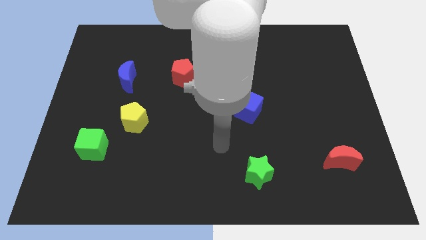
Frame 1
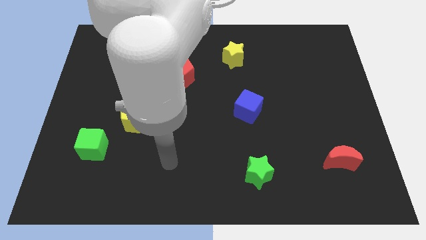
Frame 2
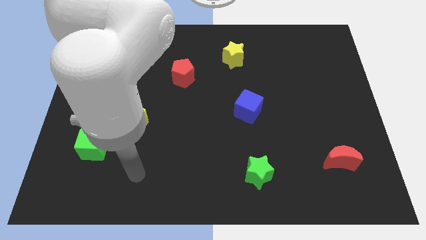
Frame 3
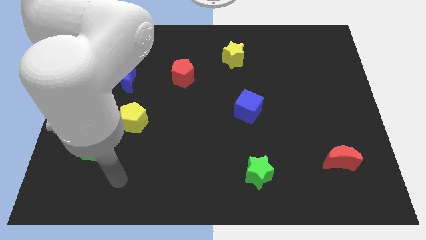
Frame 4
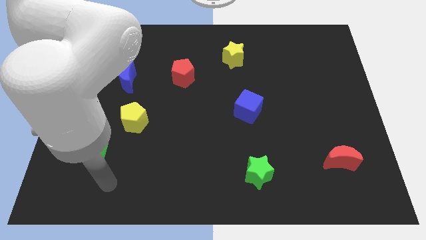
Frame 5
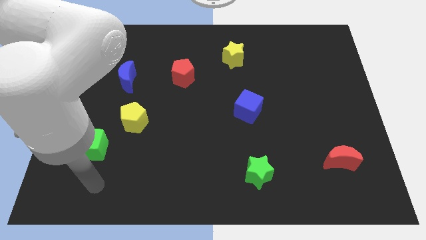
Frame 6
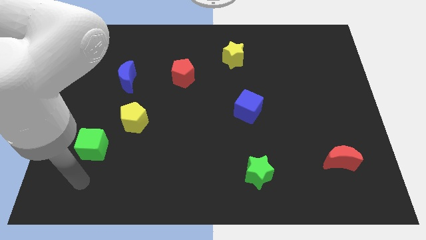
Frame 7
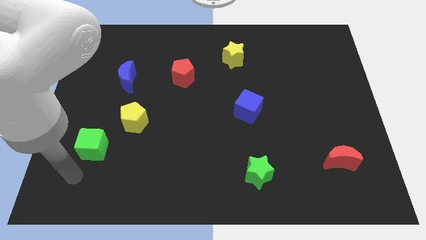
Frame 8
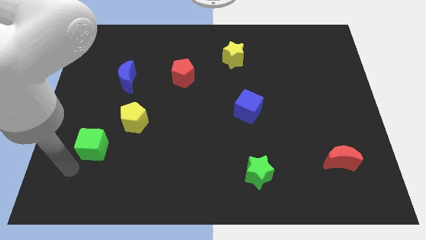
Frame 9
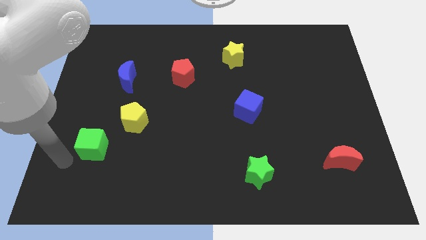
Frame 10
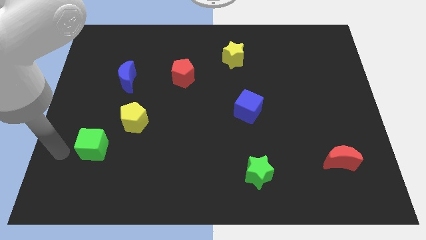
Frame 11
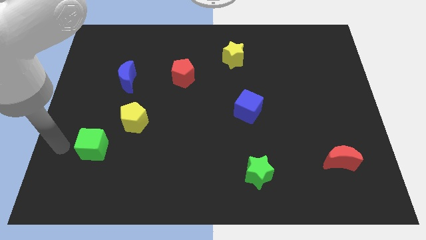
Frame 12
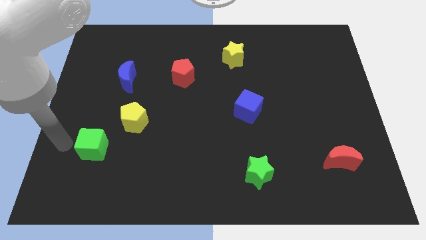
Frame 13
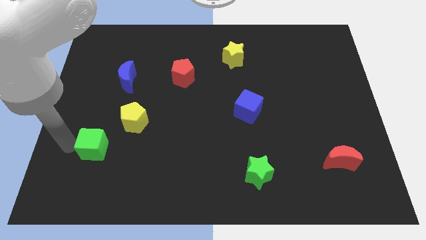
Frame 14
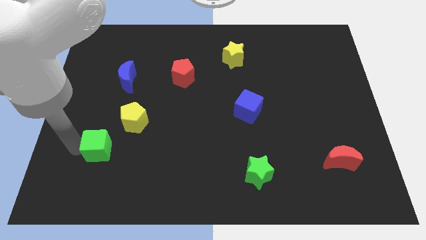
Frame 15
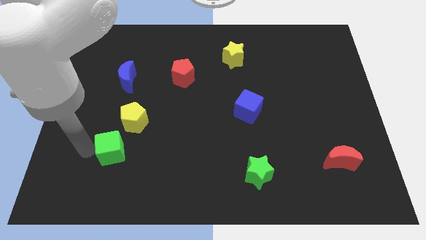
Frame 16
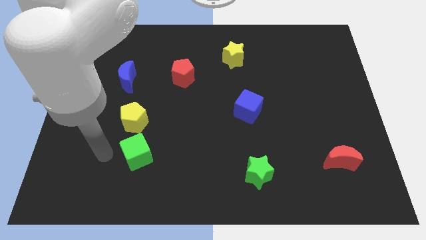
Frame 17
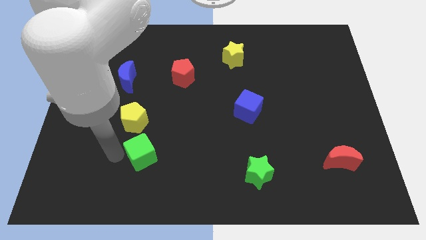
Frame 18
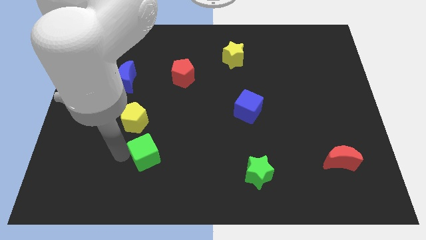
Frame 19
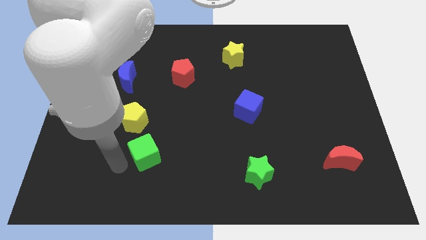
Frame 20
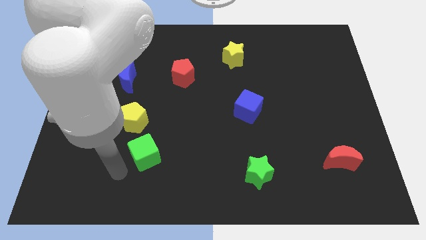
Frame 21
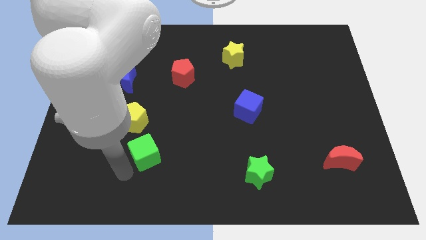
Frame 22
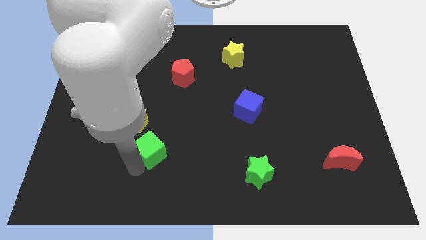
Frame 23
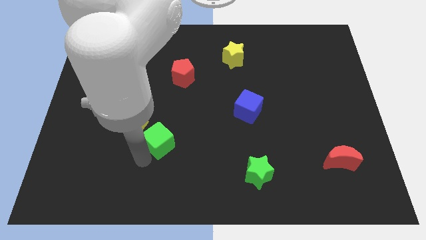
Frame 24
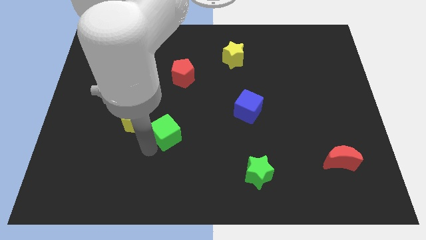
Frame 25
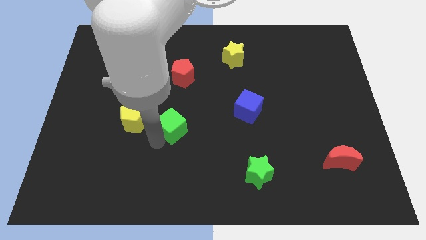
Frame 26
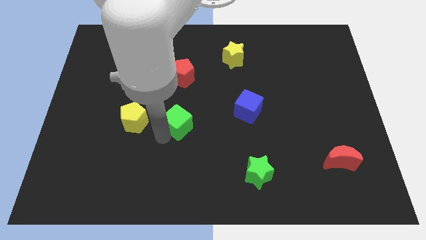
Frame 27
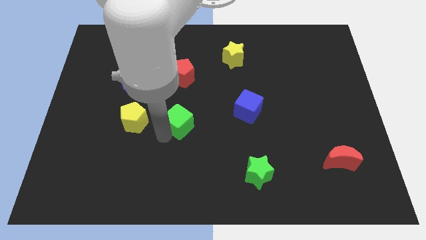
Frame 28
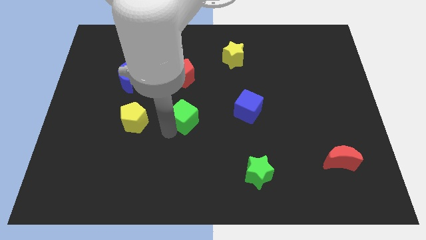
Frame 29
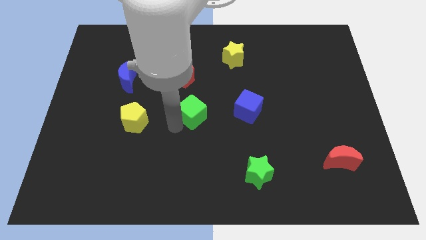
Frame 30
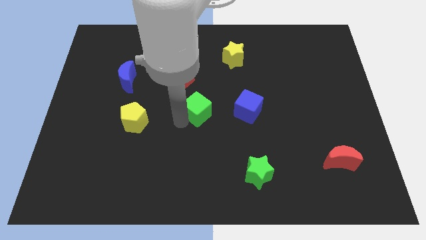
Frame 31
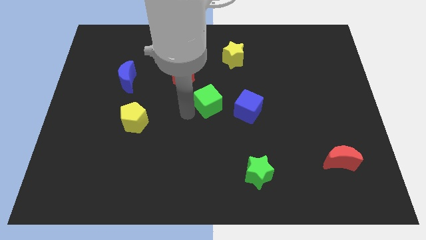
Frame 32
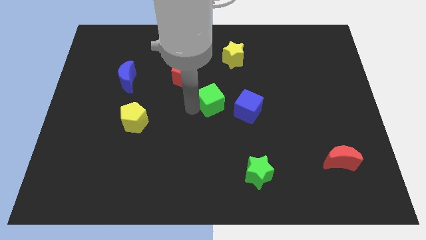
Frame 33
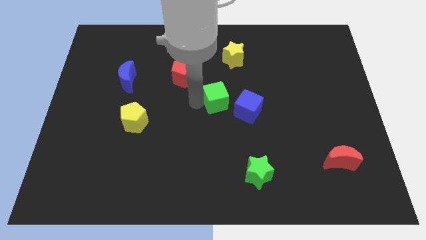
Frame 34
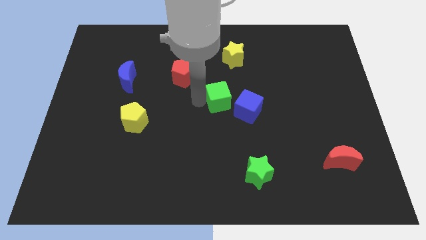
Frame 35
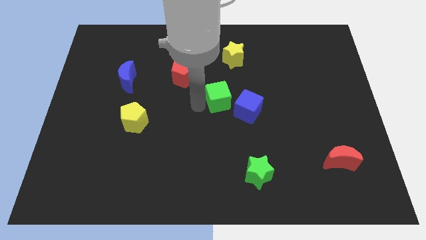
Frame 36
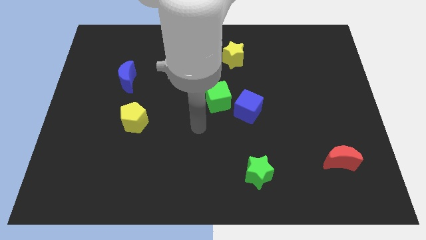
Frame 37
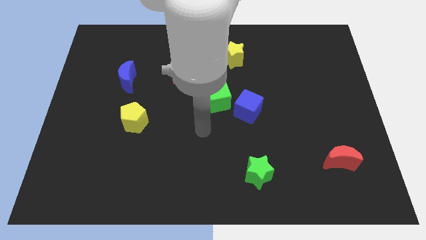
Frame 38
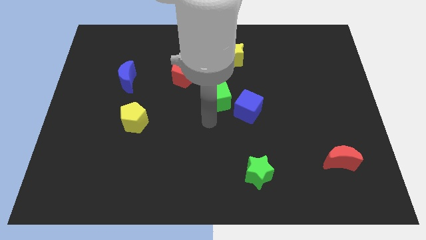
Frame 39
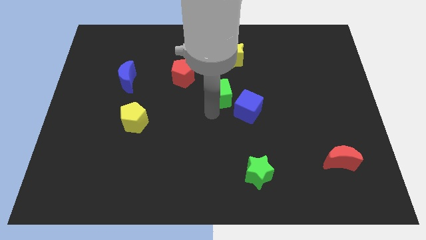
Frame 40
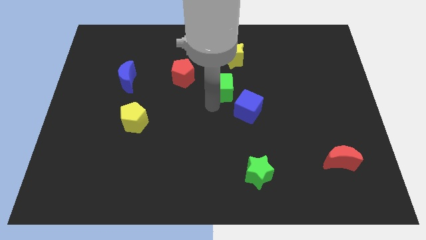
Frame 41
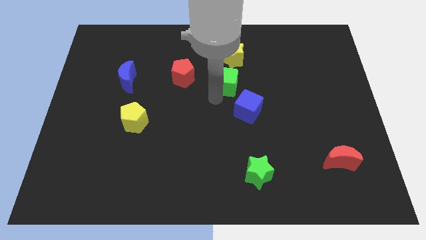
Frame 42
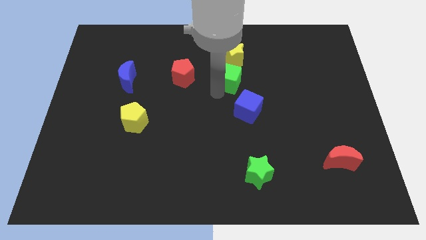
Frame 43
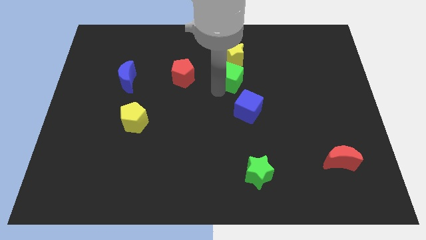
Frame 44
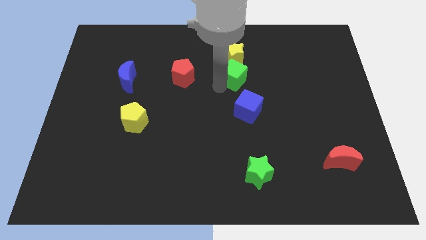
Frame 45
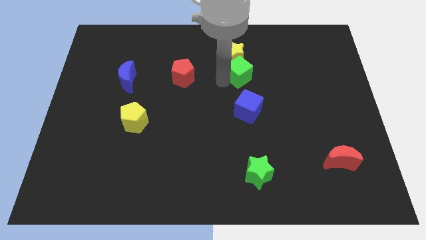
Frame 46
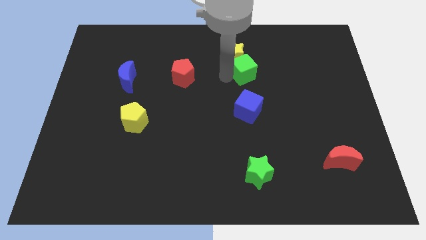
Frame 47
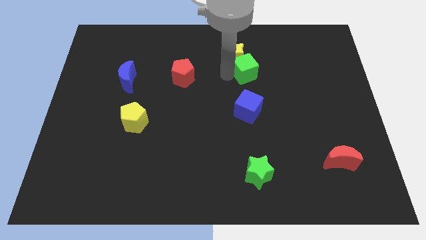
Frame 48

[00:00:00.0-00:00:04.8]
put the green cube to the yellow star

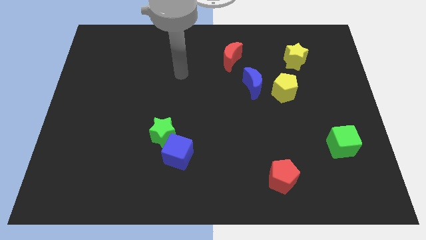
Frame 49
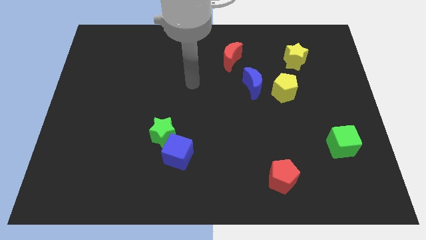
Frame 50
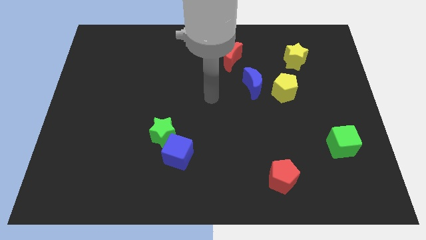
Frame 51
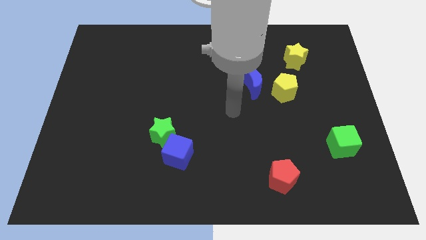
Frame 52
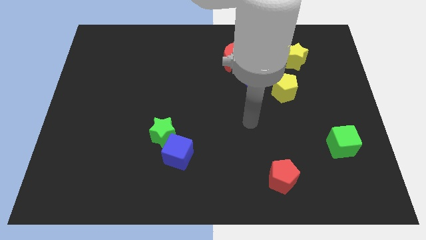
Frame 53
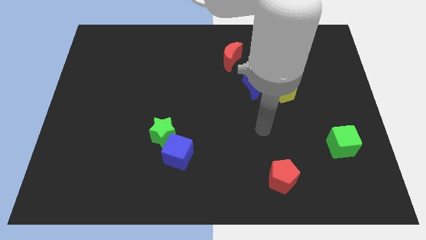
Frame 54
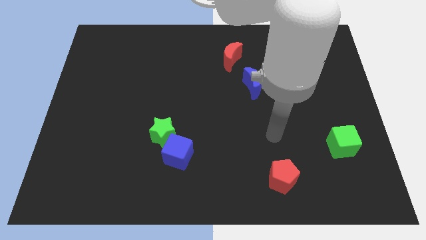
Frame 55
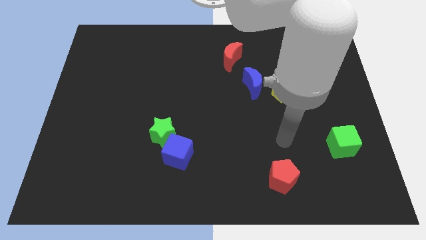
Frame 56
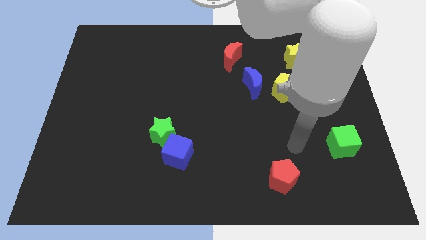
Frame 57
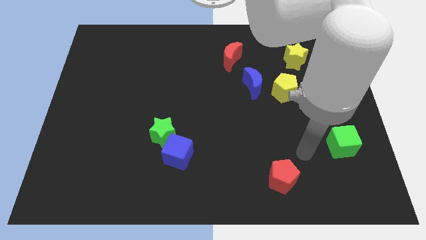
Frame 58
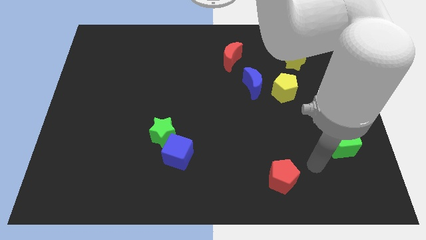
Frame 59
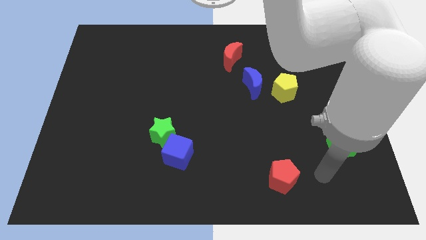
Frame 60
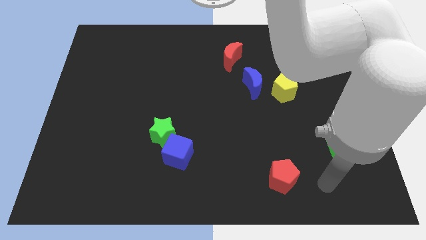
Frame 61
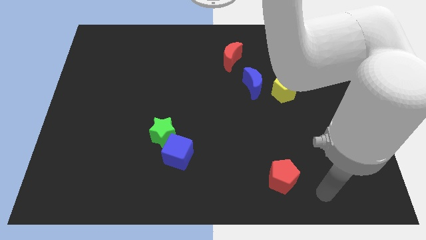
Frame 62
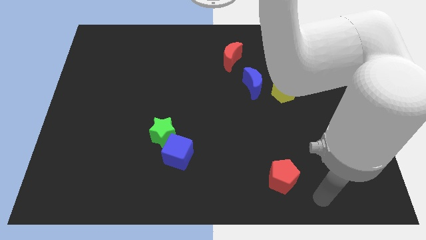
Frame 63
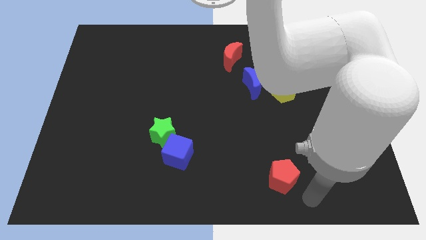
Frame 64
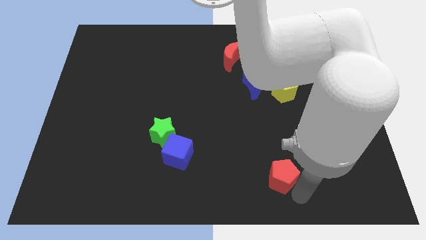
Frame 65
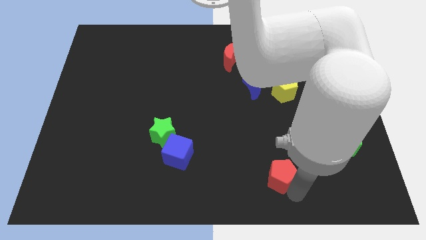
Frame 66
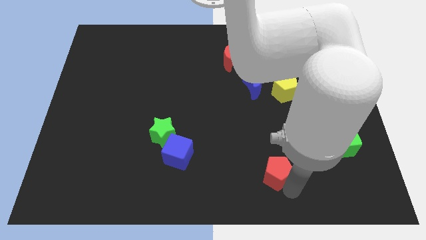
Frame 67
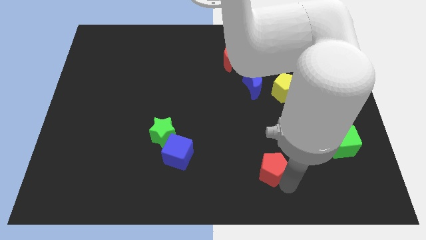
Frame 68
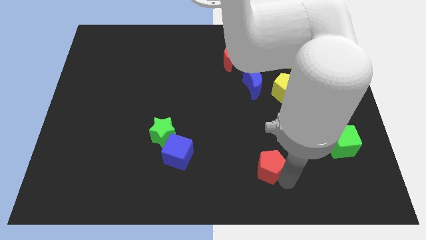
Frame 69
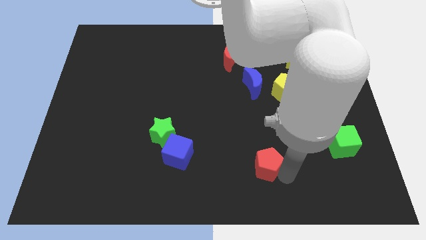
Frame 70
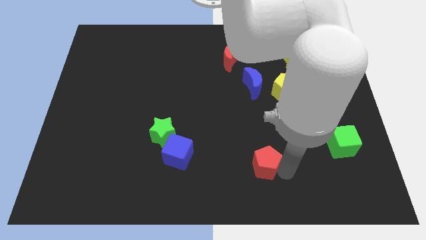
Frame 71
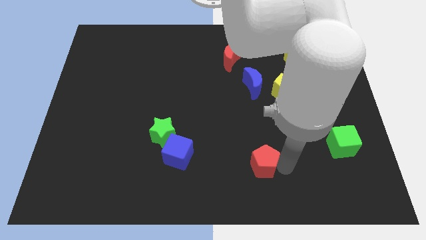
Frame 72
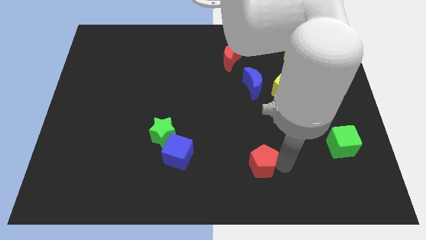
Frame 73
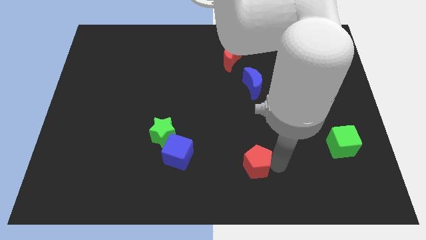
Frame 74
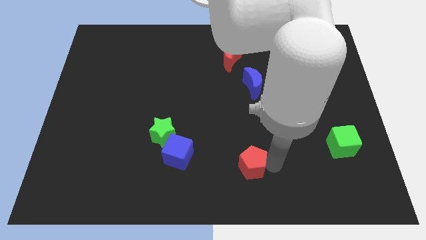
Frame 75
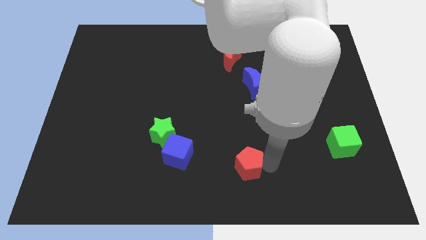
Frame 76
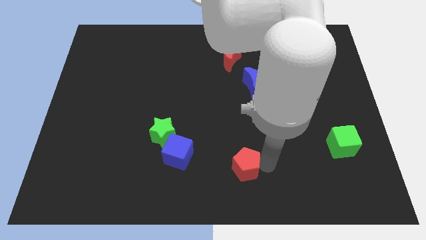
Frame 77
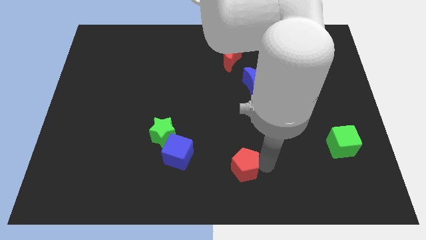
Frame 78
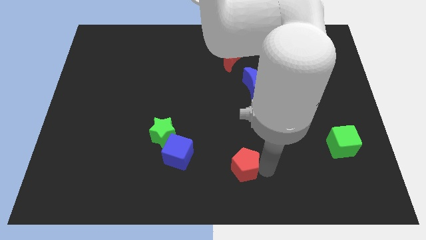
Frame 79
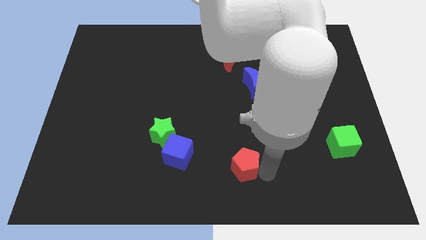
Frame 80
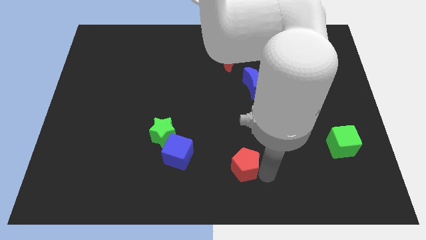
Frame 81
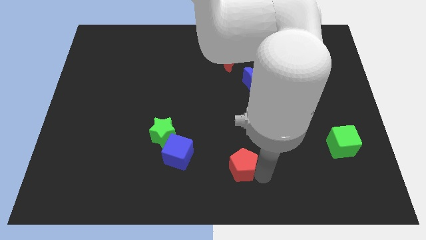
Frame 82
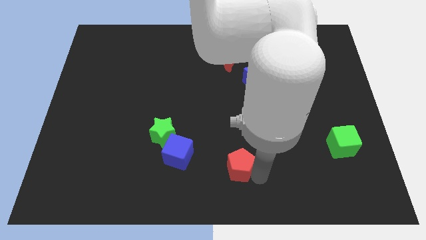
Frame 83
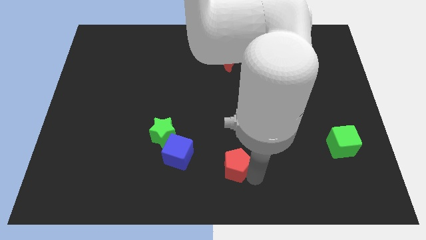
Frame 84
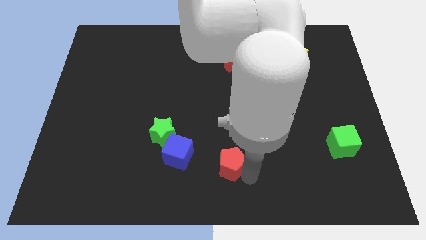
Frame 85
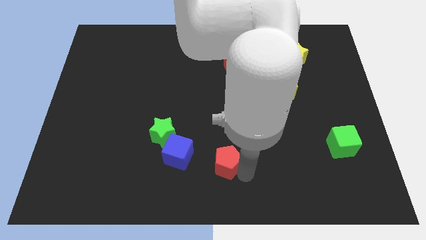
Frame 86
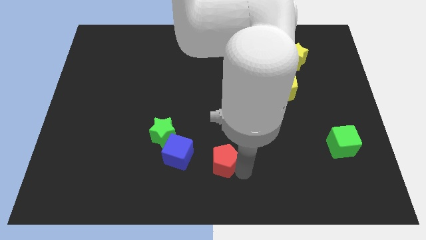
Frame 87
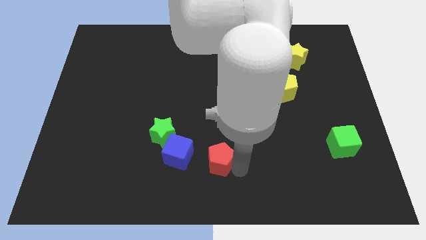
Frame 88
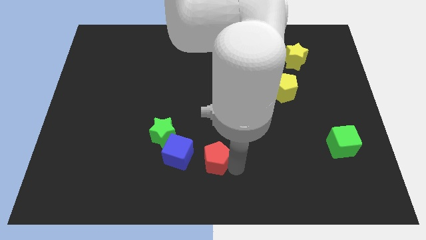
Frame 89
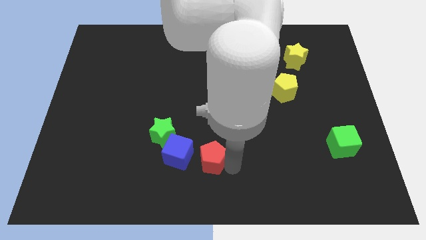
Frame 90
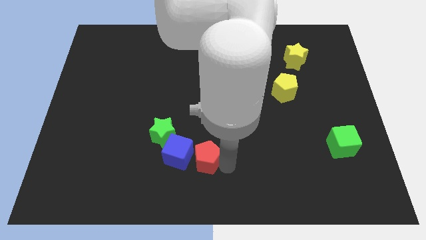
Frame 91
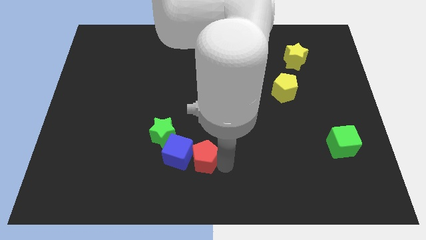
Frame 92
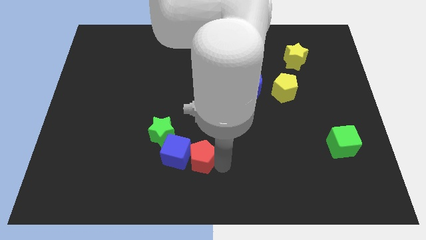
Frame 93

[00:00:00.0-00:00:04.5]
push the red pentagon towards the blue cube
